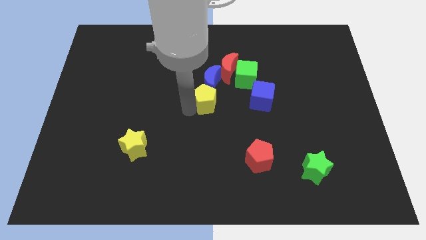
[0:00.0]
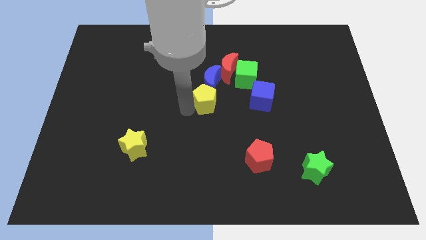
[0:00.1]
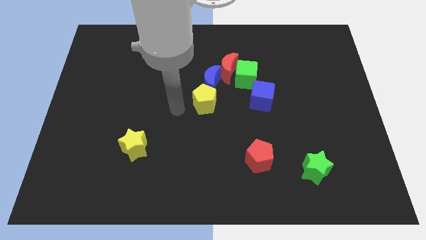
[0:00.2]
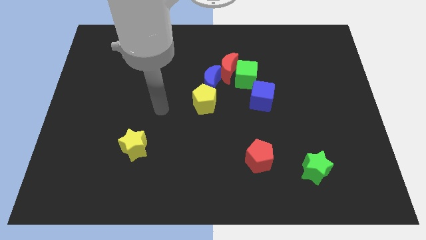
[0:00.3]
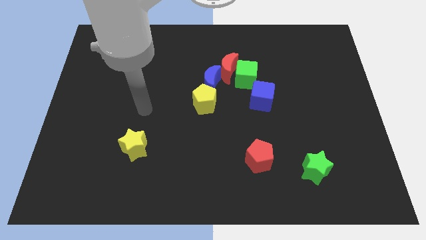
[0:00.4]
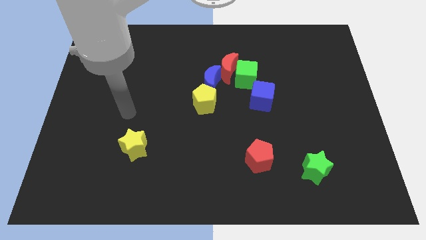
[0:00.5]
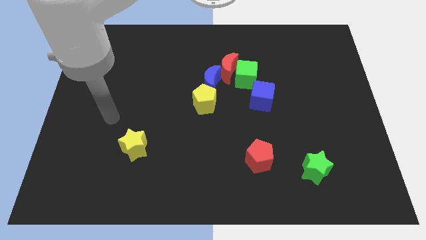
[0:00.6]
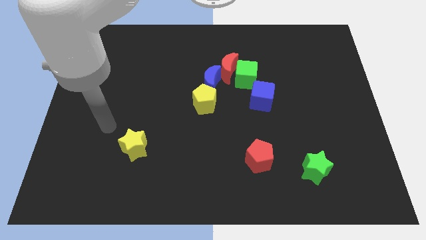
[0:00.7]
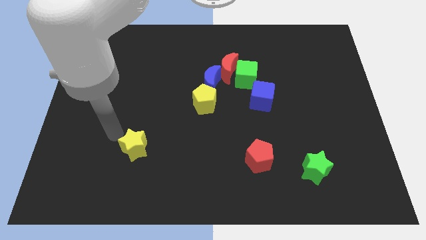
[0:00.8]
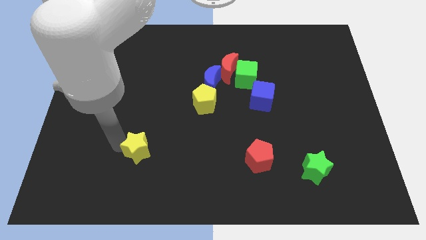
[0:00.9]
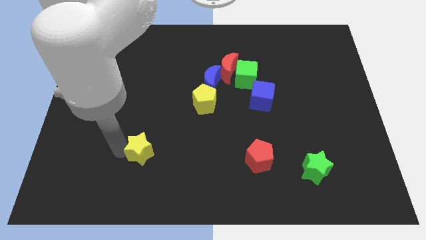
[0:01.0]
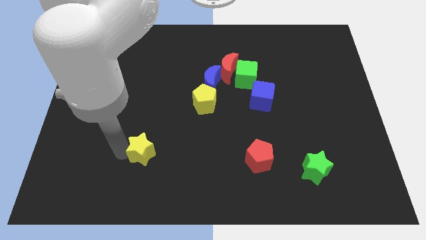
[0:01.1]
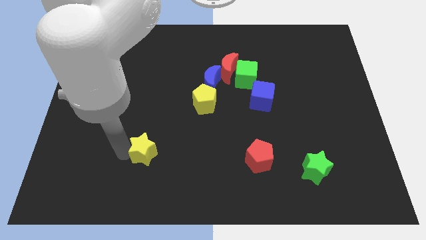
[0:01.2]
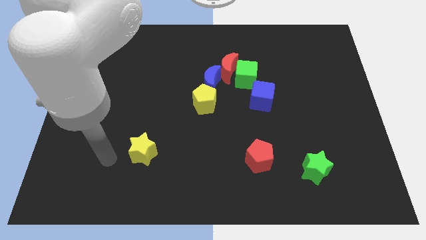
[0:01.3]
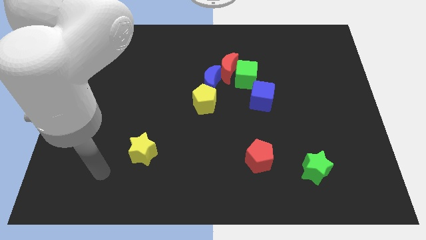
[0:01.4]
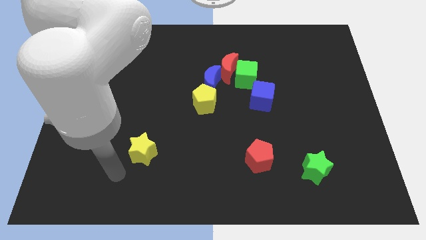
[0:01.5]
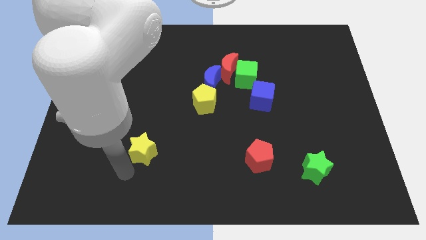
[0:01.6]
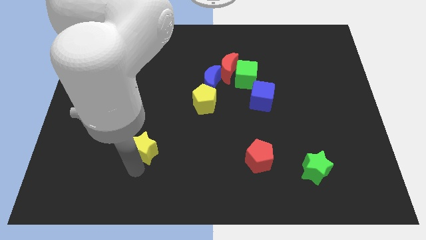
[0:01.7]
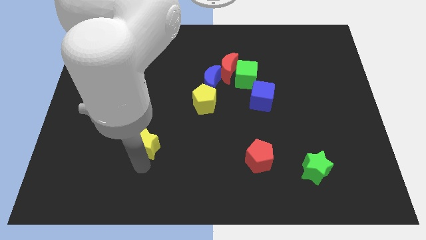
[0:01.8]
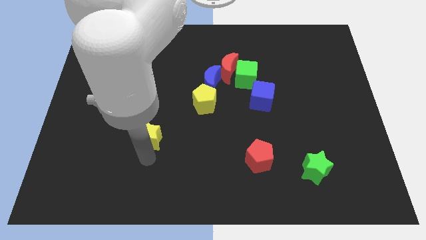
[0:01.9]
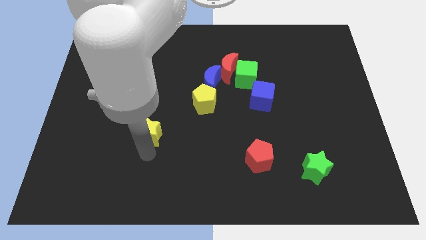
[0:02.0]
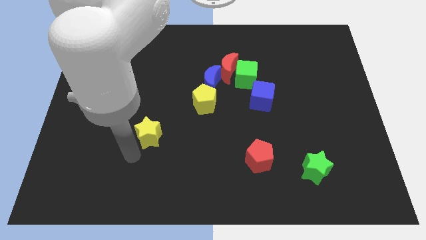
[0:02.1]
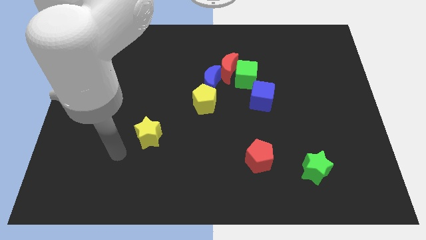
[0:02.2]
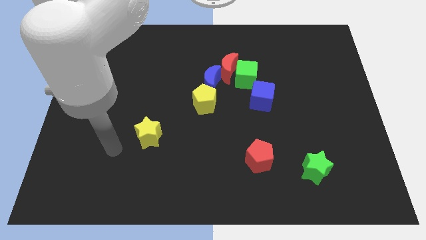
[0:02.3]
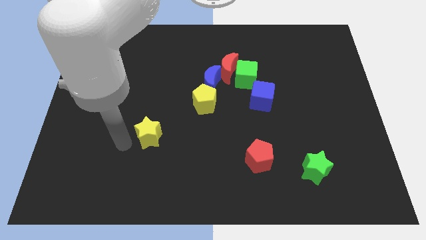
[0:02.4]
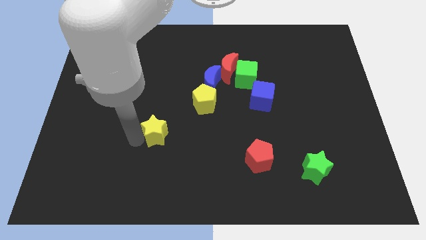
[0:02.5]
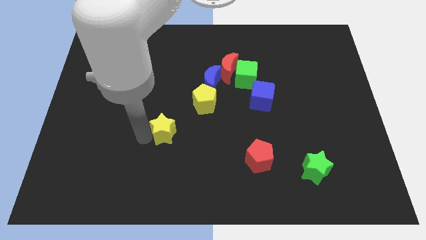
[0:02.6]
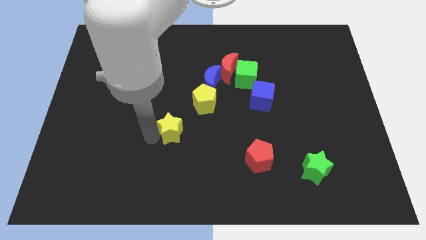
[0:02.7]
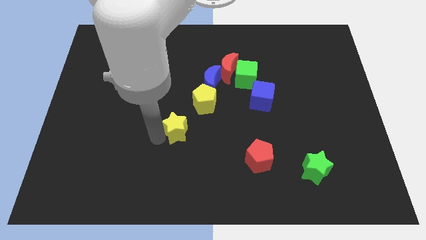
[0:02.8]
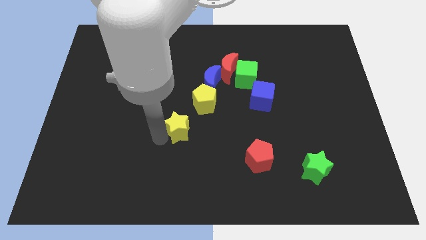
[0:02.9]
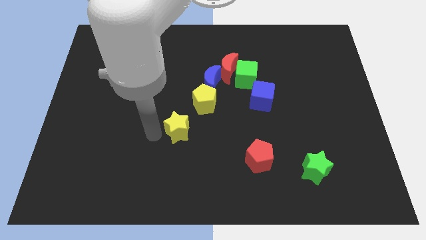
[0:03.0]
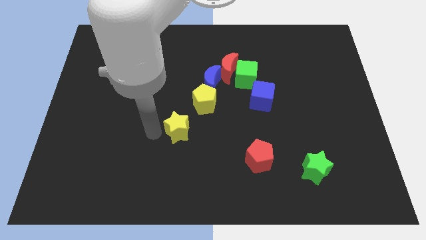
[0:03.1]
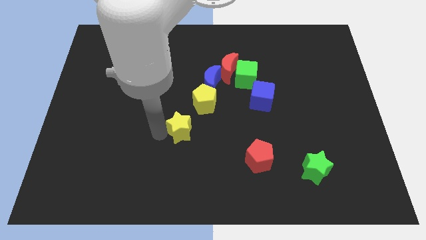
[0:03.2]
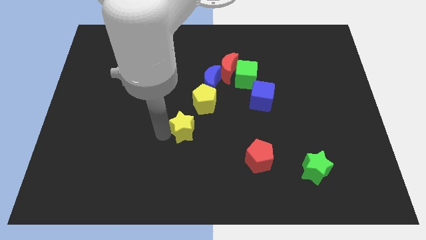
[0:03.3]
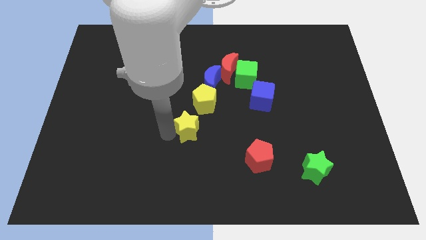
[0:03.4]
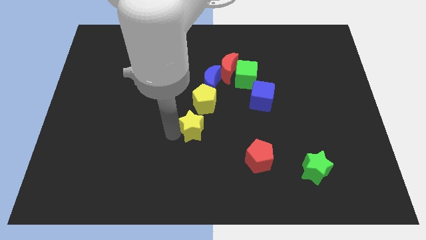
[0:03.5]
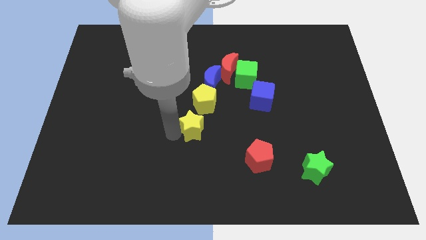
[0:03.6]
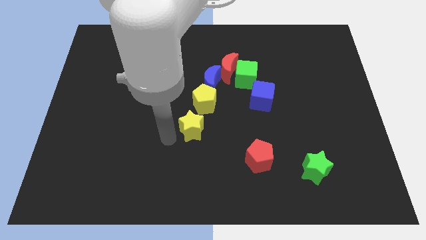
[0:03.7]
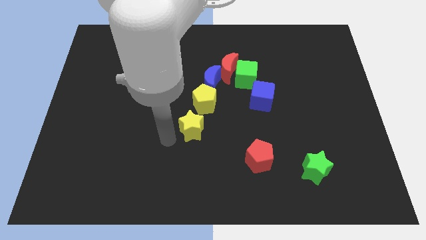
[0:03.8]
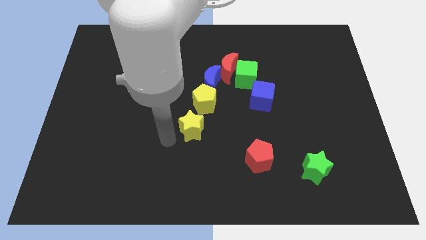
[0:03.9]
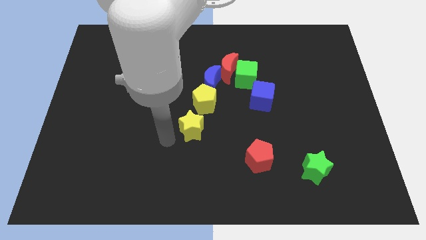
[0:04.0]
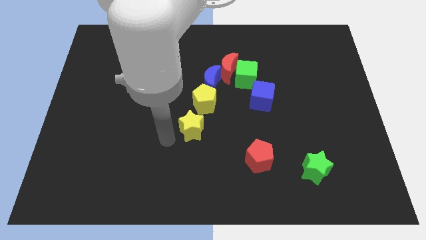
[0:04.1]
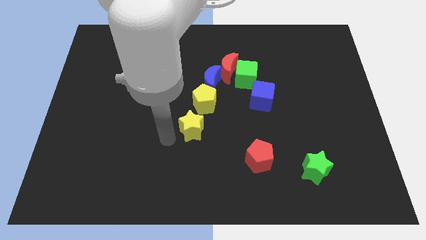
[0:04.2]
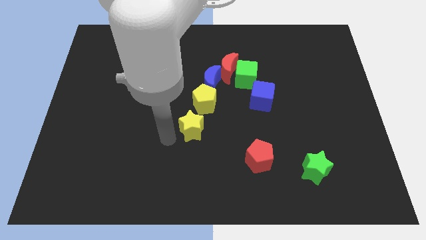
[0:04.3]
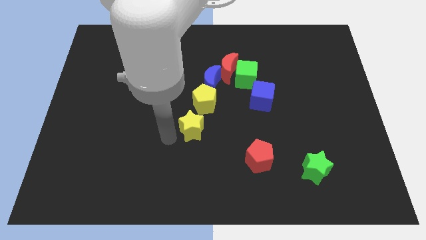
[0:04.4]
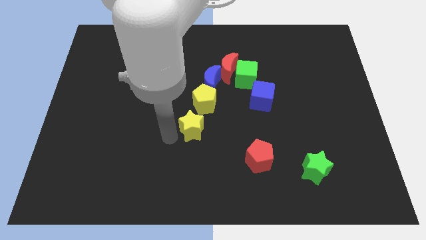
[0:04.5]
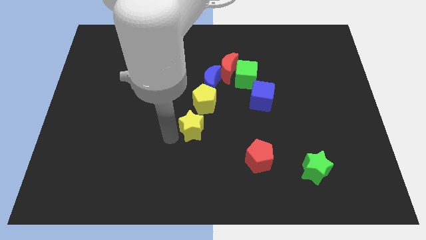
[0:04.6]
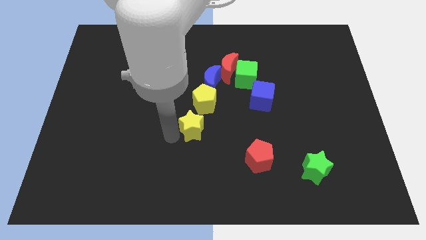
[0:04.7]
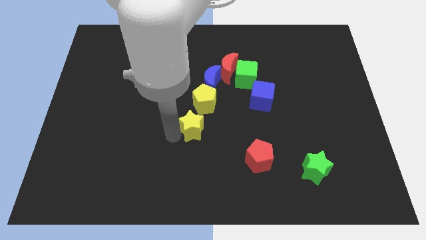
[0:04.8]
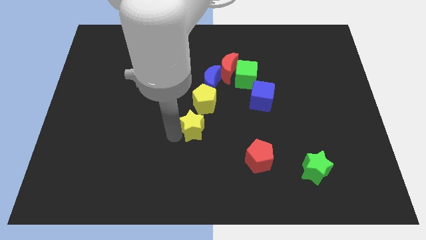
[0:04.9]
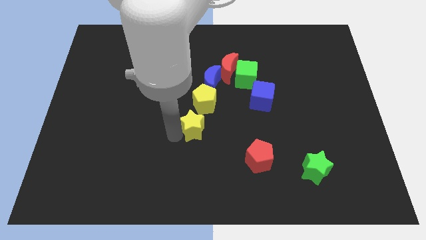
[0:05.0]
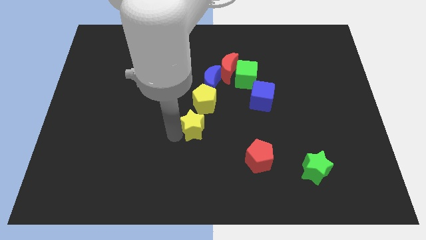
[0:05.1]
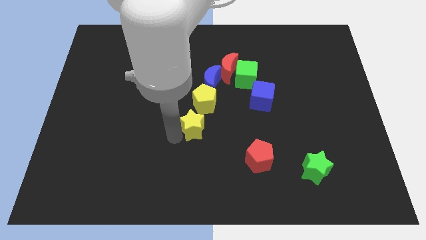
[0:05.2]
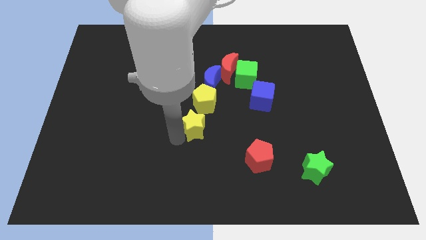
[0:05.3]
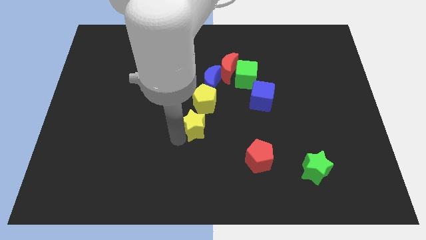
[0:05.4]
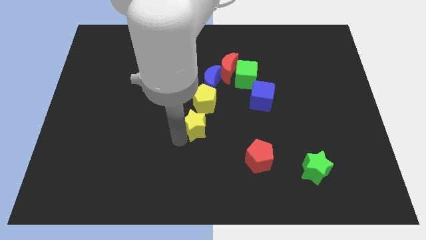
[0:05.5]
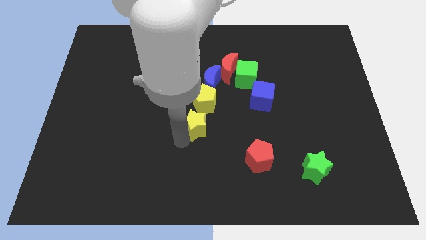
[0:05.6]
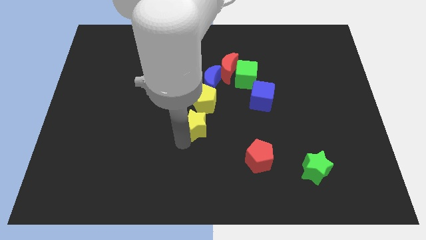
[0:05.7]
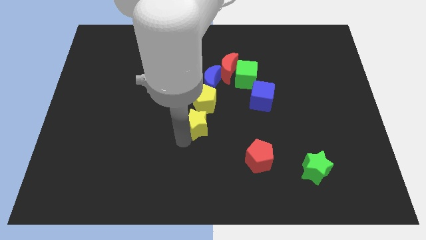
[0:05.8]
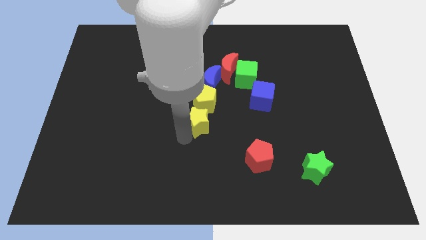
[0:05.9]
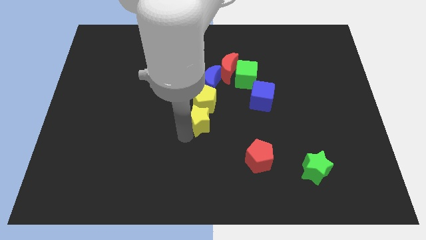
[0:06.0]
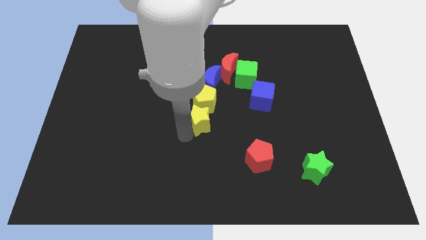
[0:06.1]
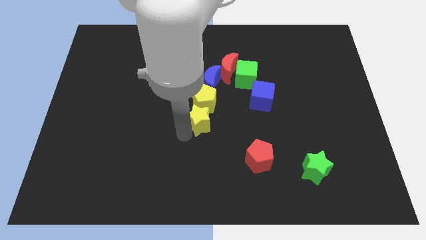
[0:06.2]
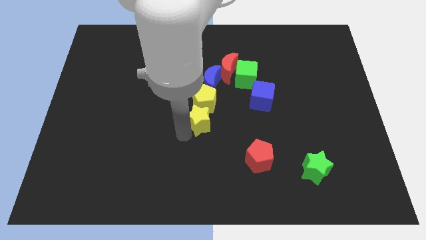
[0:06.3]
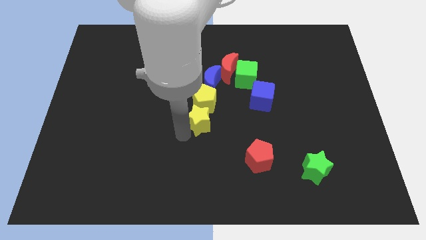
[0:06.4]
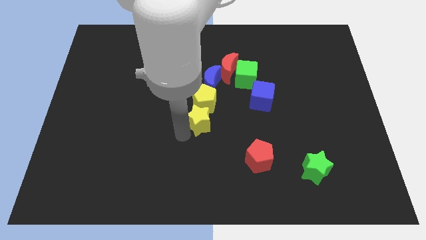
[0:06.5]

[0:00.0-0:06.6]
move yellow star below yellow pentagon

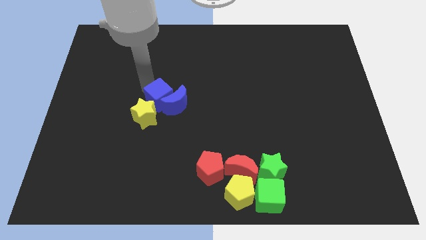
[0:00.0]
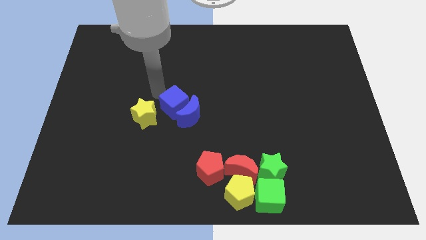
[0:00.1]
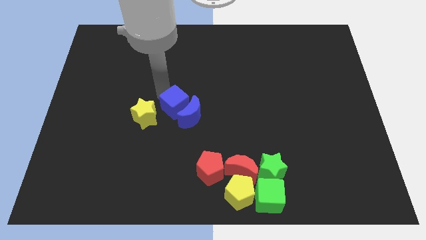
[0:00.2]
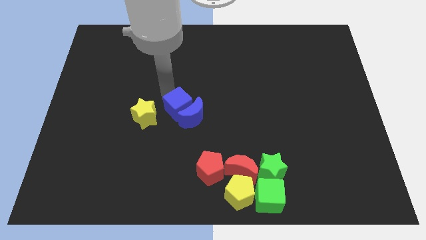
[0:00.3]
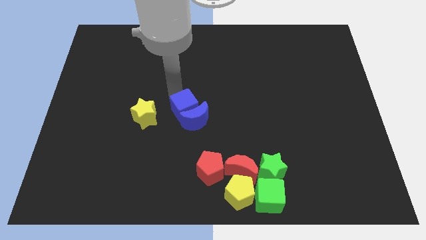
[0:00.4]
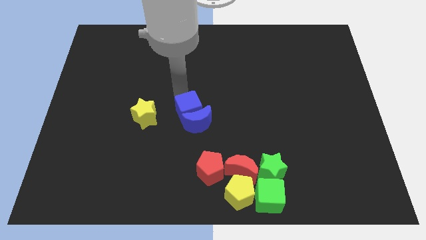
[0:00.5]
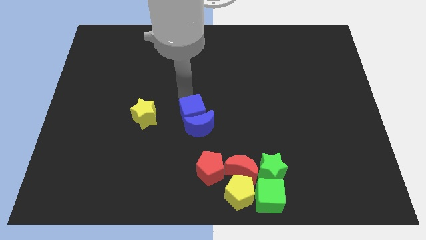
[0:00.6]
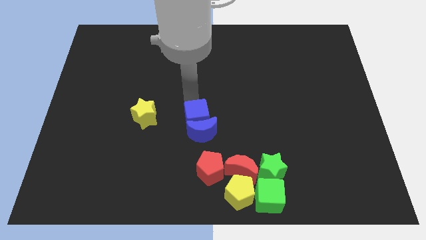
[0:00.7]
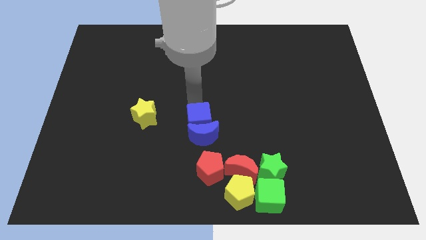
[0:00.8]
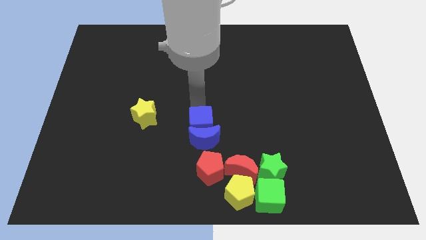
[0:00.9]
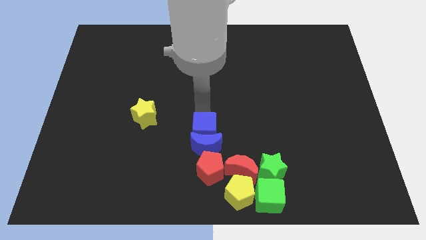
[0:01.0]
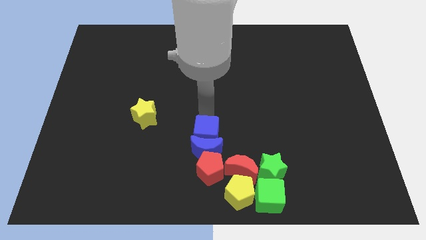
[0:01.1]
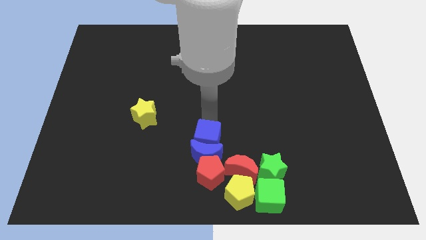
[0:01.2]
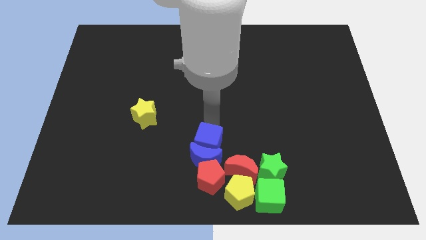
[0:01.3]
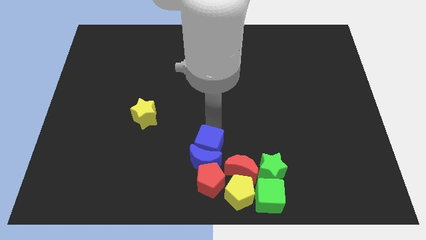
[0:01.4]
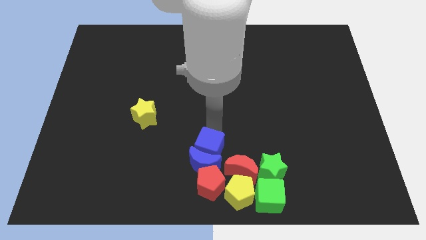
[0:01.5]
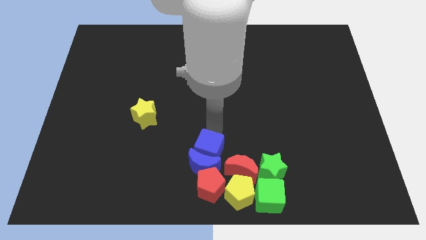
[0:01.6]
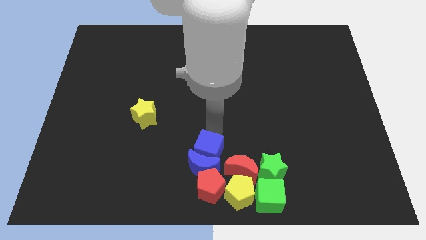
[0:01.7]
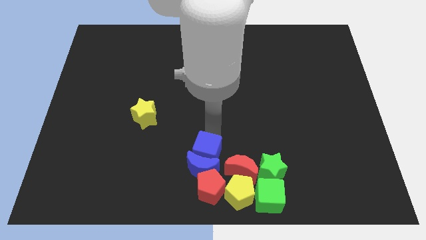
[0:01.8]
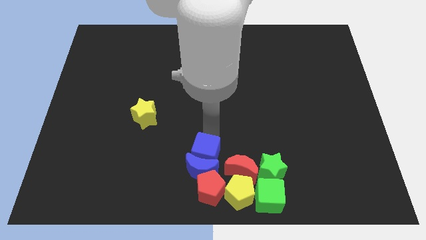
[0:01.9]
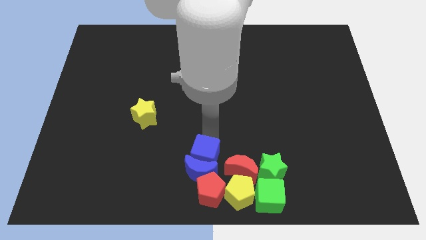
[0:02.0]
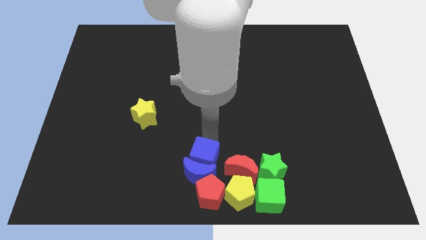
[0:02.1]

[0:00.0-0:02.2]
push the blue blocks into the red pentagon
